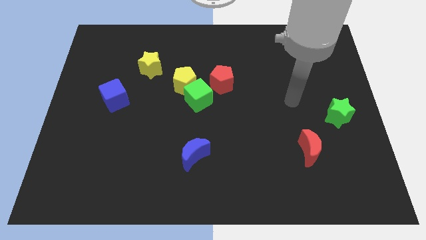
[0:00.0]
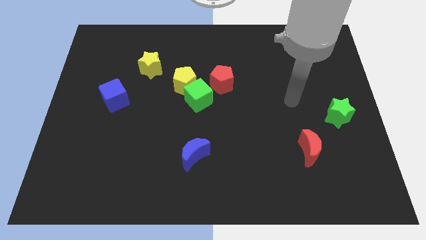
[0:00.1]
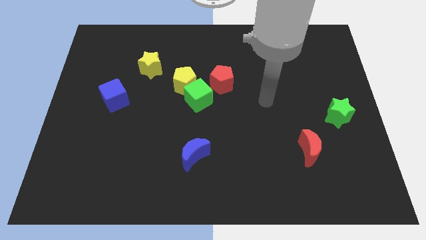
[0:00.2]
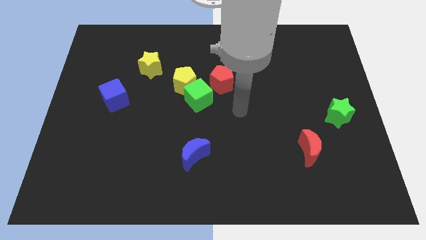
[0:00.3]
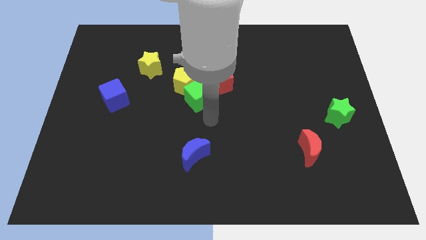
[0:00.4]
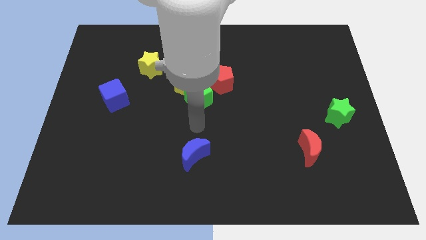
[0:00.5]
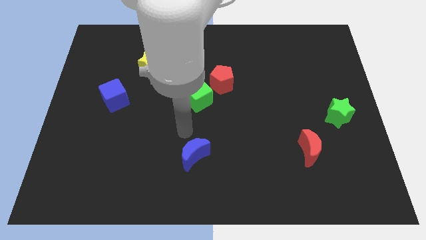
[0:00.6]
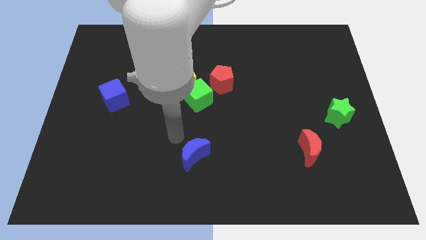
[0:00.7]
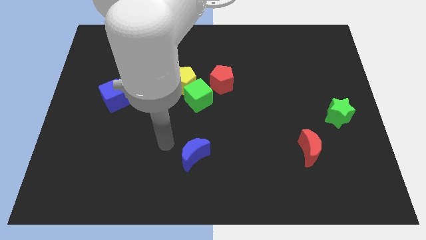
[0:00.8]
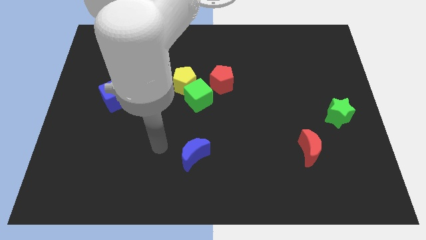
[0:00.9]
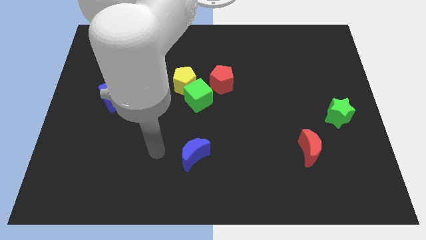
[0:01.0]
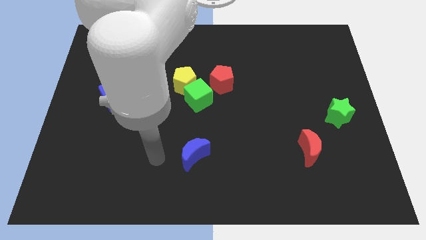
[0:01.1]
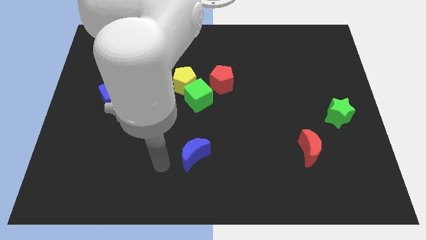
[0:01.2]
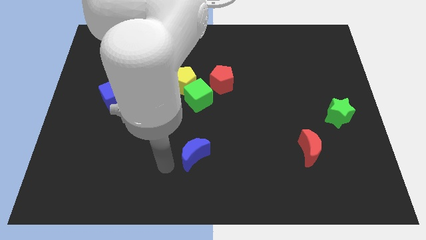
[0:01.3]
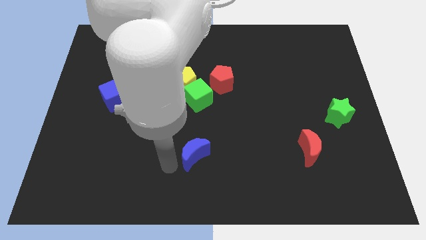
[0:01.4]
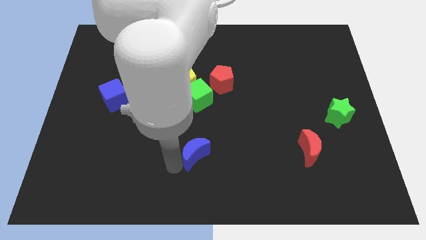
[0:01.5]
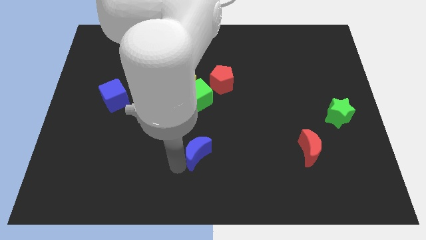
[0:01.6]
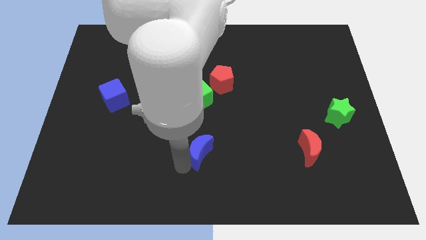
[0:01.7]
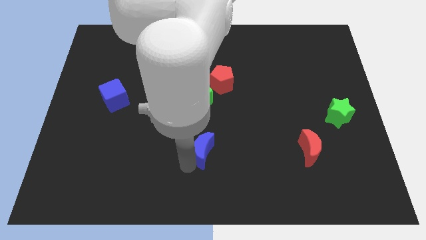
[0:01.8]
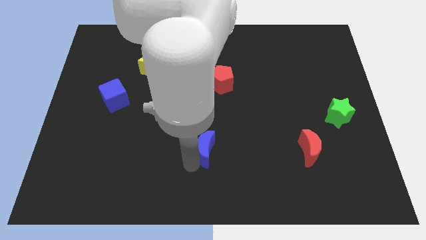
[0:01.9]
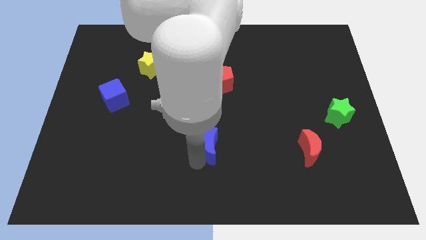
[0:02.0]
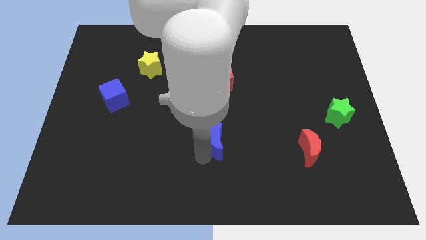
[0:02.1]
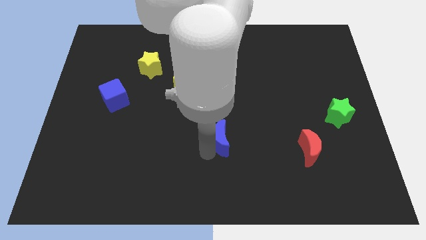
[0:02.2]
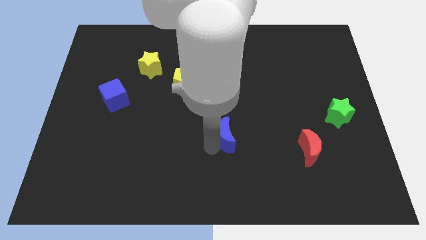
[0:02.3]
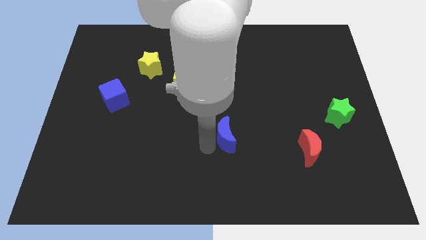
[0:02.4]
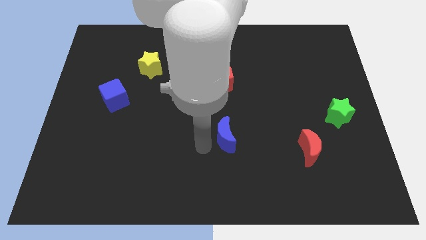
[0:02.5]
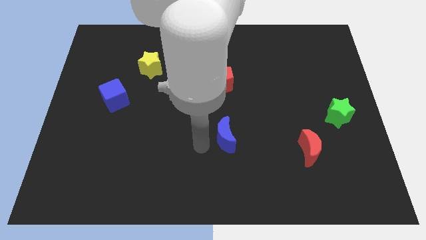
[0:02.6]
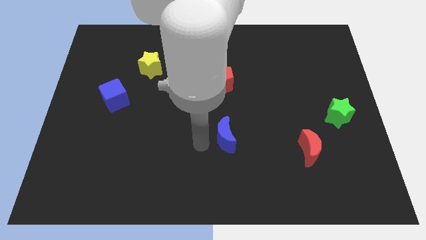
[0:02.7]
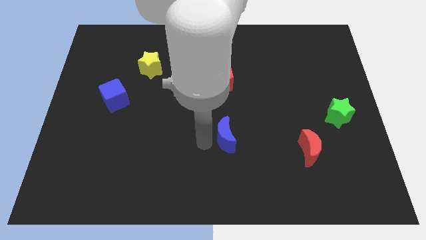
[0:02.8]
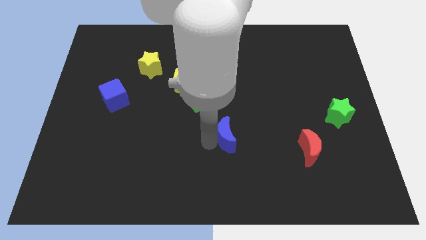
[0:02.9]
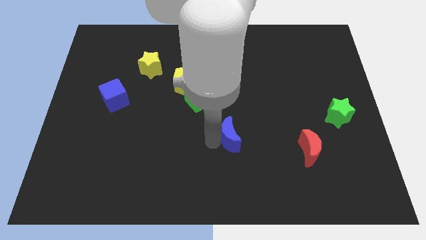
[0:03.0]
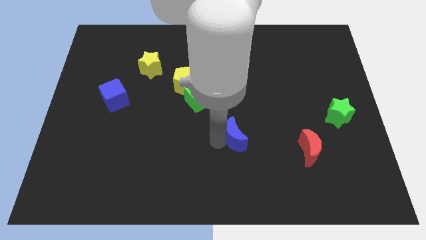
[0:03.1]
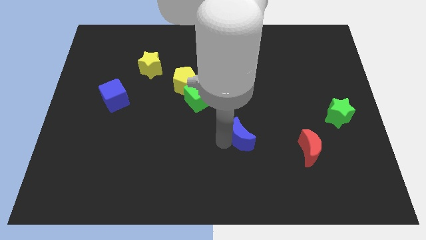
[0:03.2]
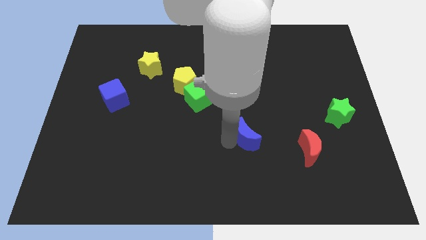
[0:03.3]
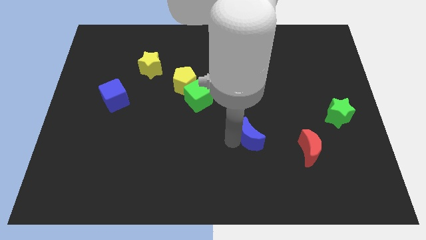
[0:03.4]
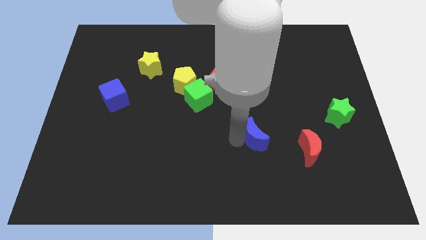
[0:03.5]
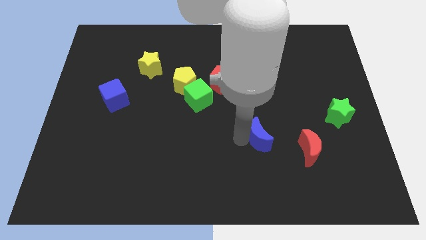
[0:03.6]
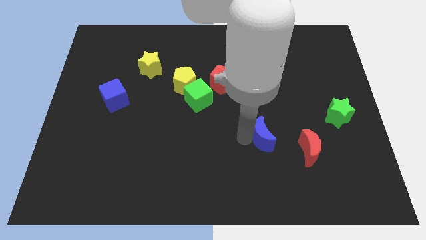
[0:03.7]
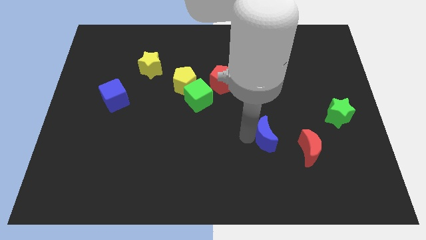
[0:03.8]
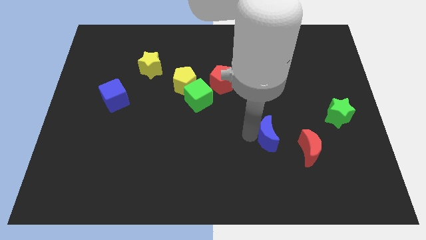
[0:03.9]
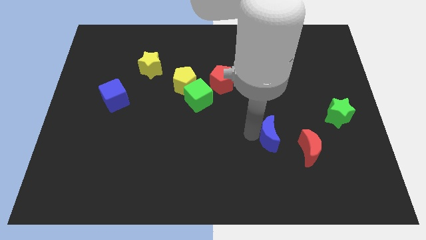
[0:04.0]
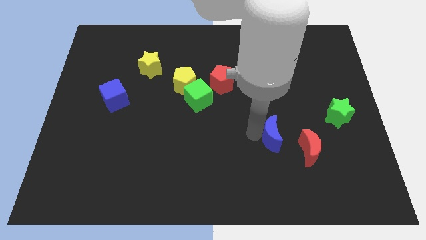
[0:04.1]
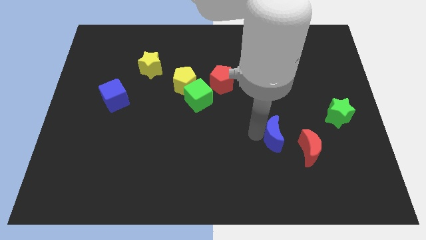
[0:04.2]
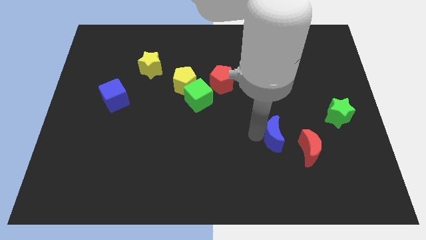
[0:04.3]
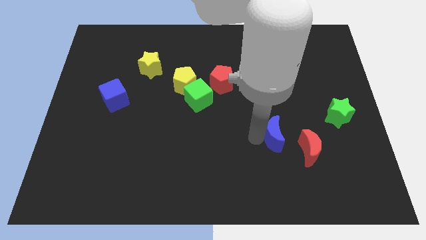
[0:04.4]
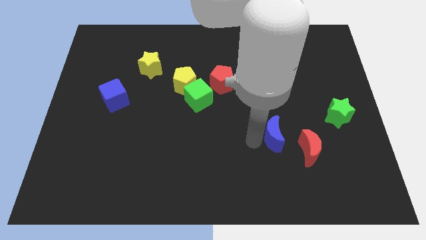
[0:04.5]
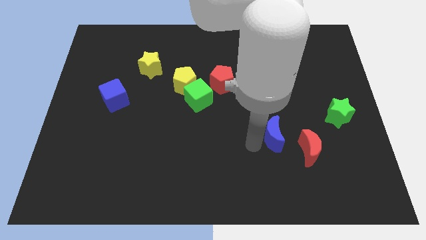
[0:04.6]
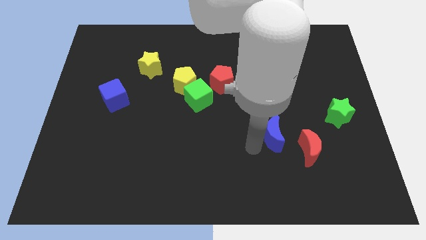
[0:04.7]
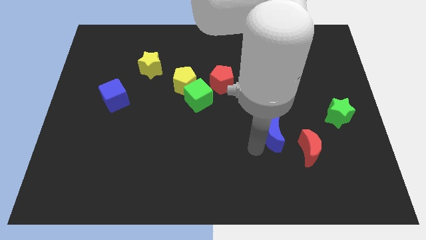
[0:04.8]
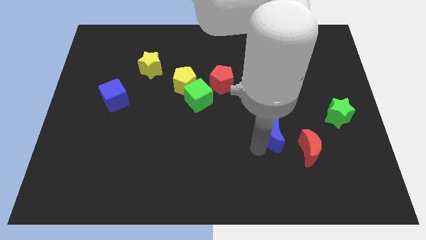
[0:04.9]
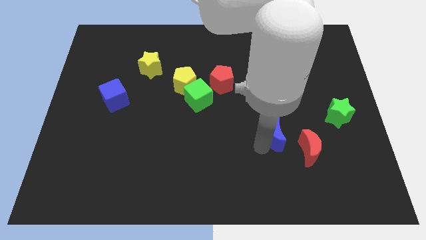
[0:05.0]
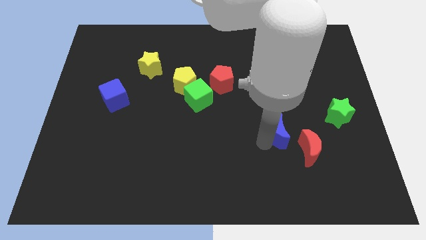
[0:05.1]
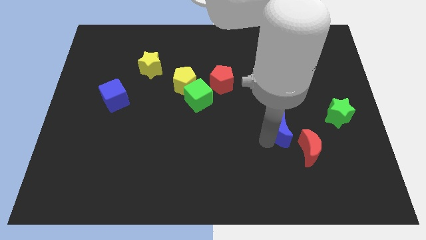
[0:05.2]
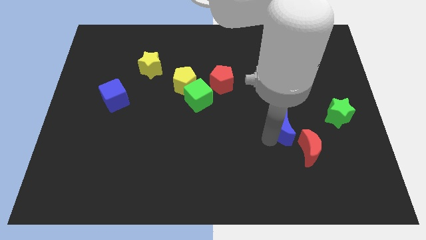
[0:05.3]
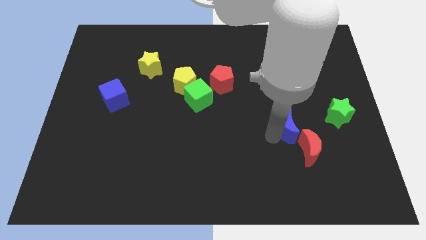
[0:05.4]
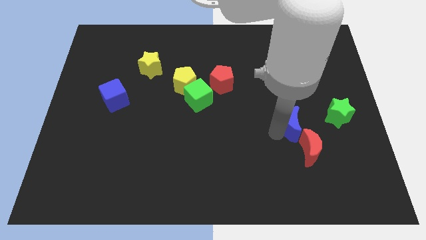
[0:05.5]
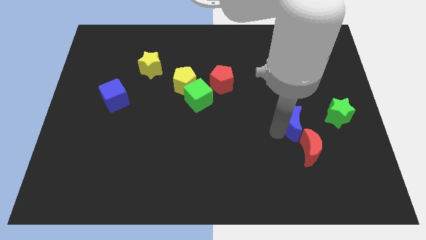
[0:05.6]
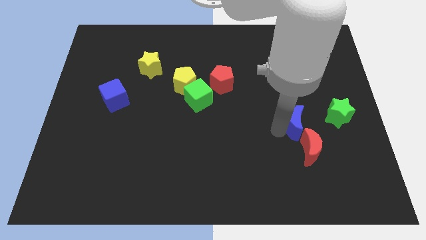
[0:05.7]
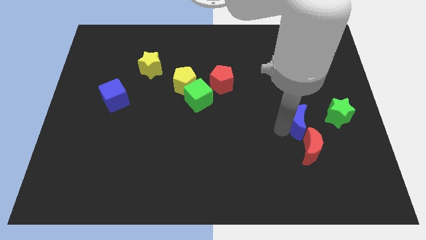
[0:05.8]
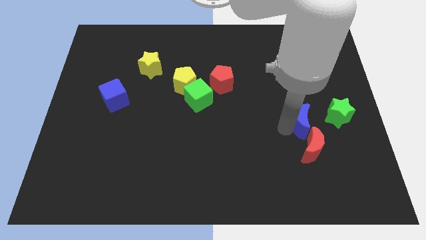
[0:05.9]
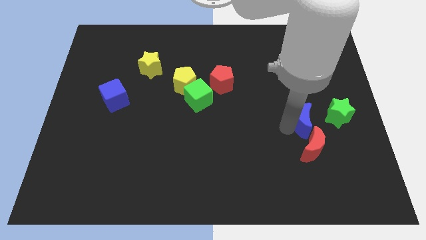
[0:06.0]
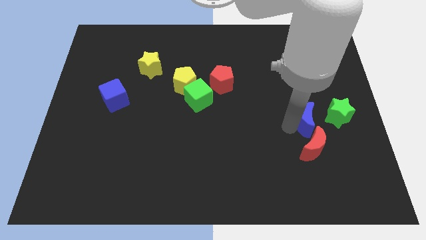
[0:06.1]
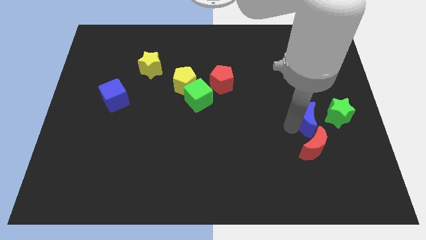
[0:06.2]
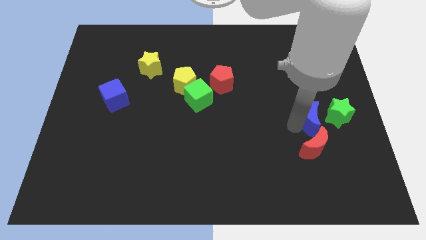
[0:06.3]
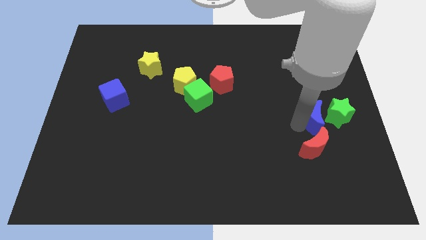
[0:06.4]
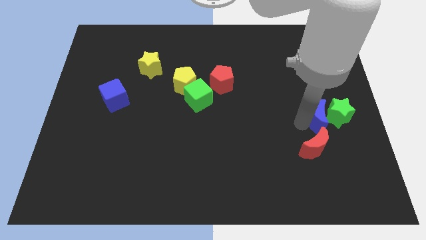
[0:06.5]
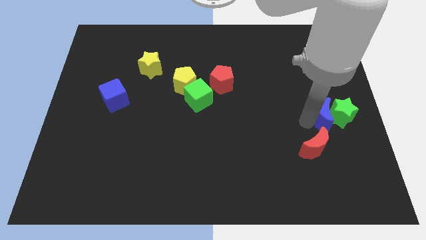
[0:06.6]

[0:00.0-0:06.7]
push the blue moon next to the green star

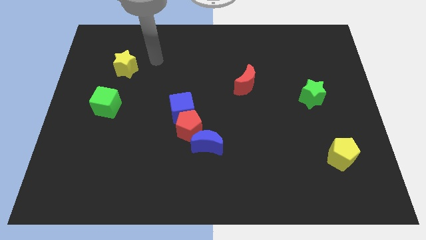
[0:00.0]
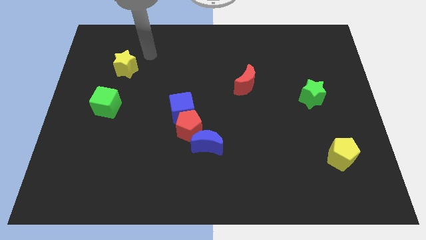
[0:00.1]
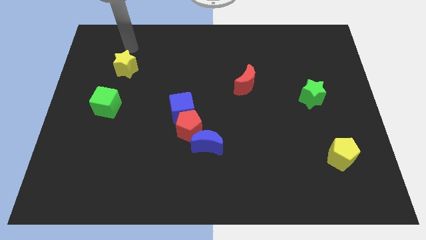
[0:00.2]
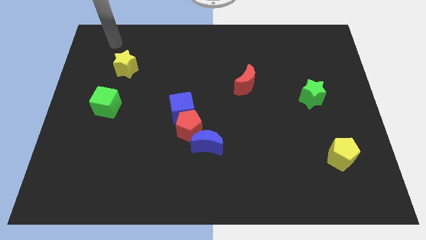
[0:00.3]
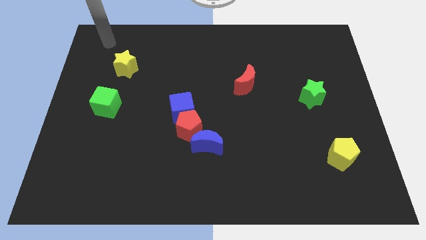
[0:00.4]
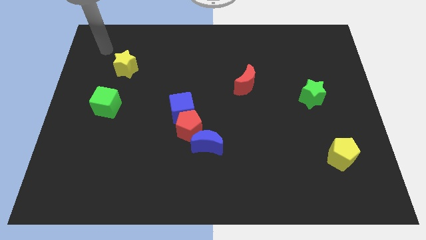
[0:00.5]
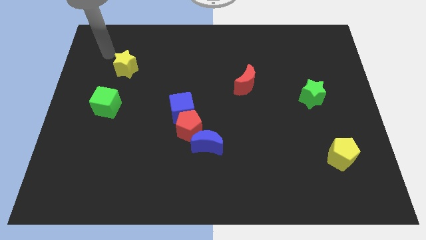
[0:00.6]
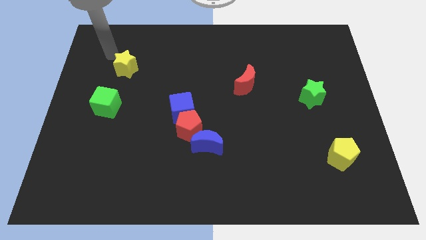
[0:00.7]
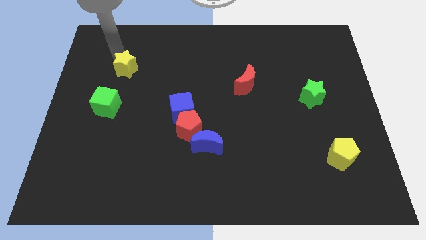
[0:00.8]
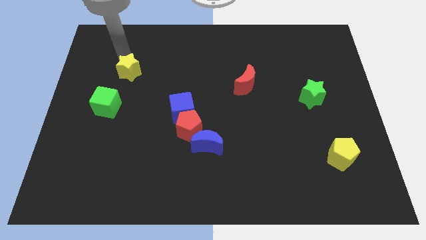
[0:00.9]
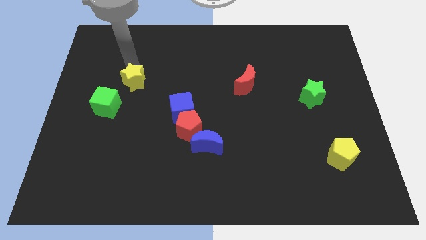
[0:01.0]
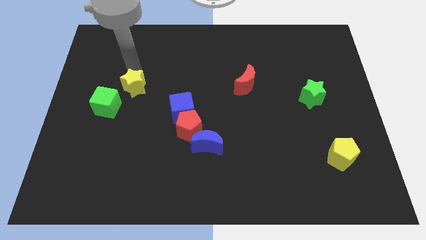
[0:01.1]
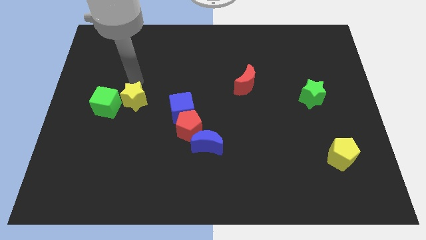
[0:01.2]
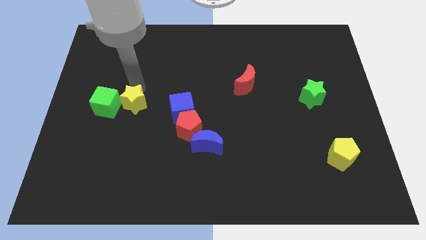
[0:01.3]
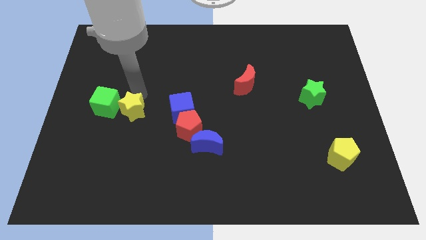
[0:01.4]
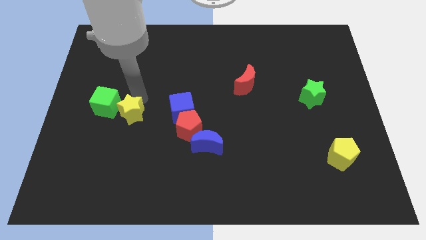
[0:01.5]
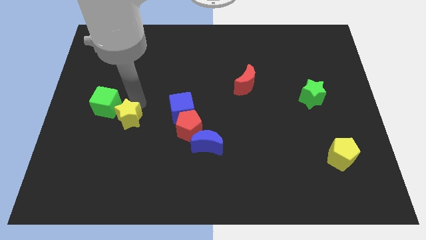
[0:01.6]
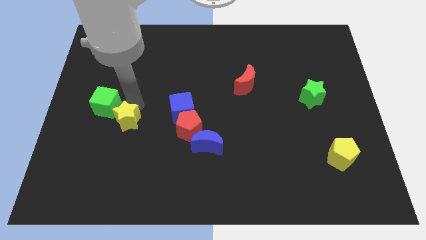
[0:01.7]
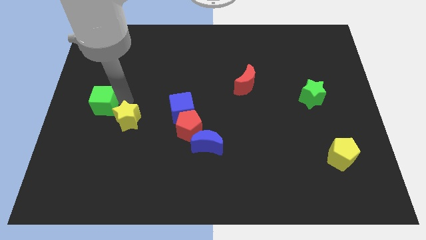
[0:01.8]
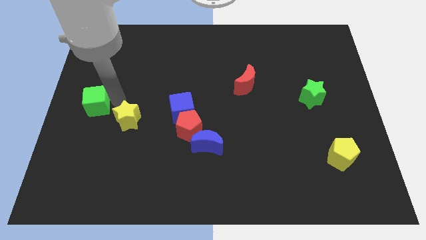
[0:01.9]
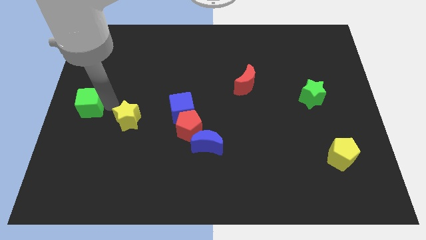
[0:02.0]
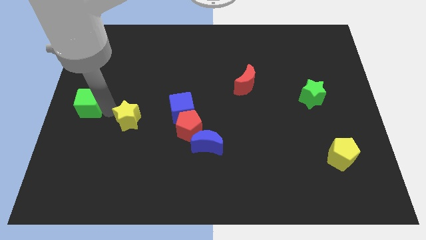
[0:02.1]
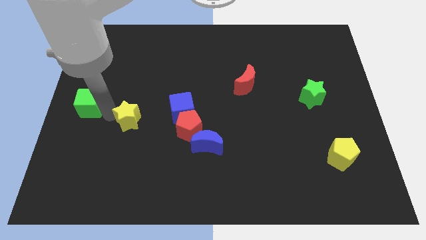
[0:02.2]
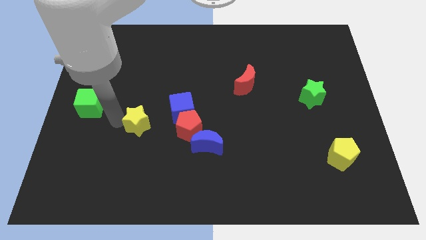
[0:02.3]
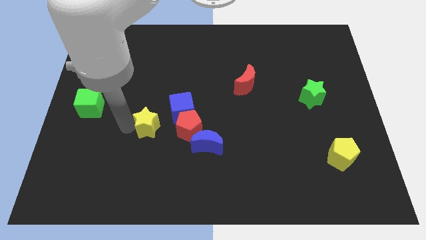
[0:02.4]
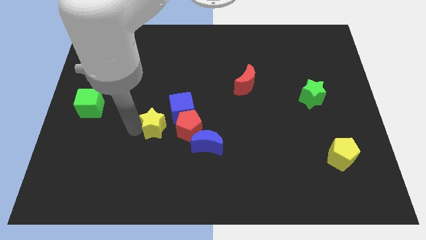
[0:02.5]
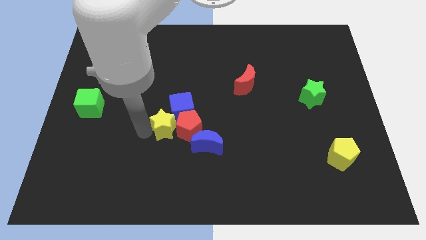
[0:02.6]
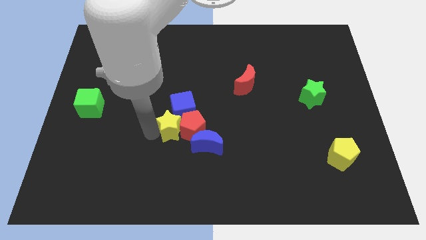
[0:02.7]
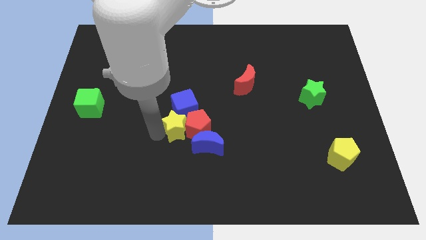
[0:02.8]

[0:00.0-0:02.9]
move the yellow star to the red pentagon
